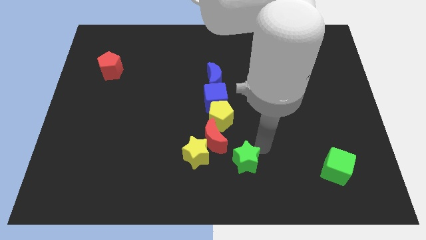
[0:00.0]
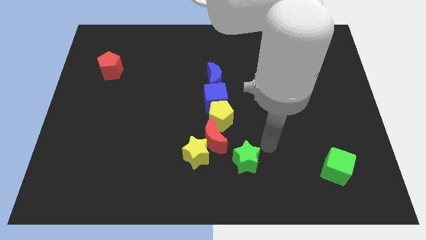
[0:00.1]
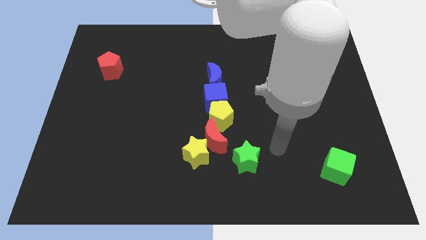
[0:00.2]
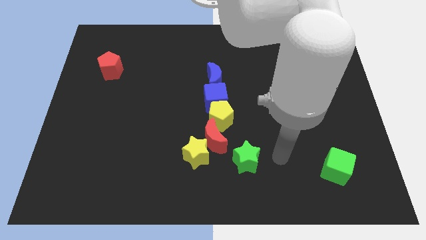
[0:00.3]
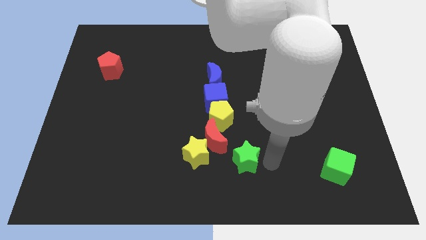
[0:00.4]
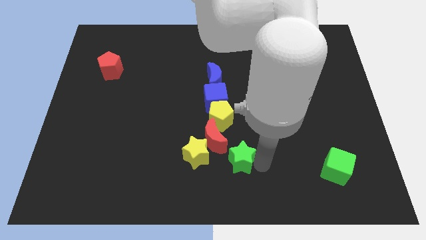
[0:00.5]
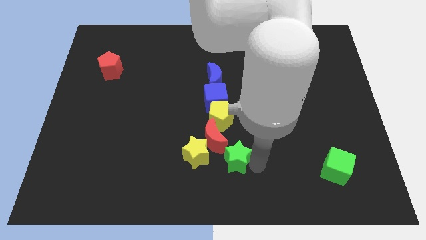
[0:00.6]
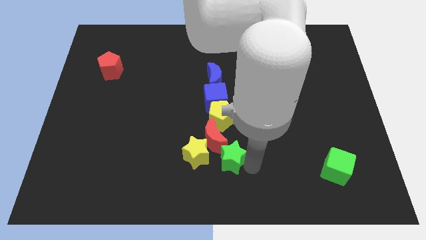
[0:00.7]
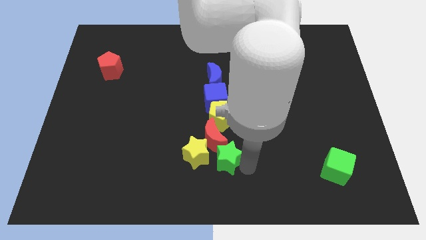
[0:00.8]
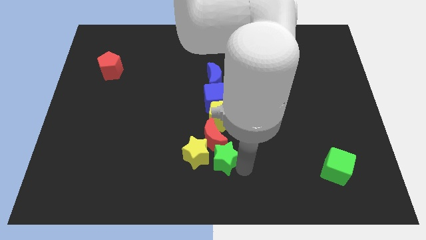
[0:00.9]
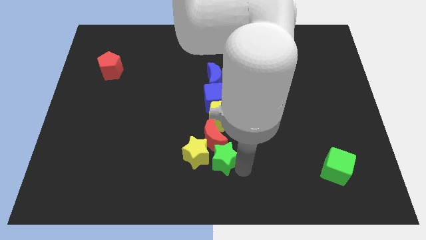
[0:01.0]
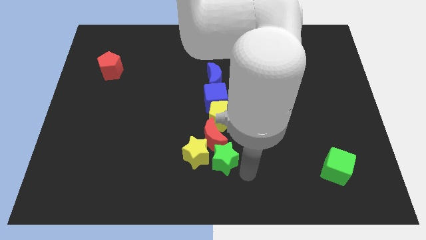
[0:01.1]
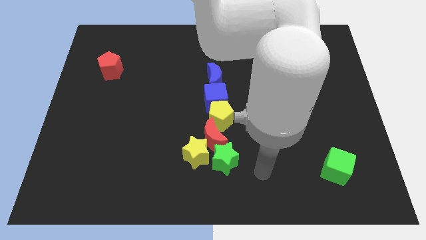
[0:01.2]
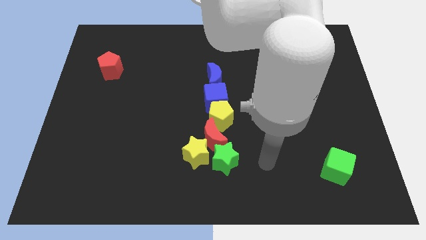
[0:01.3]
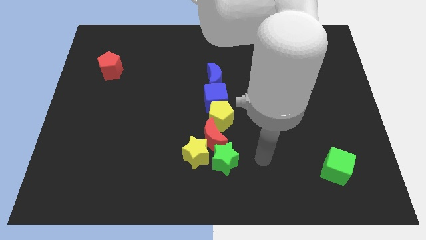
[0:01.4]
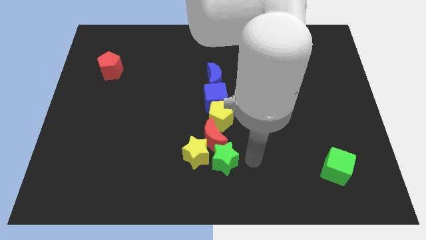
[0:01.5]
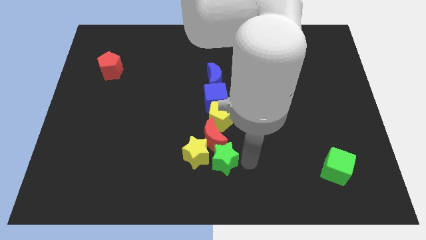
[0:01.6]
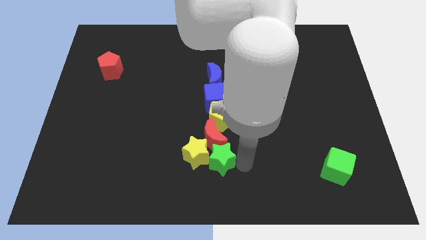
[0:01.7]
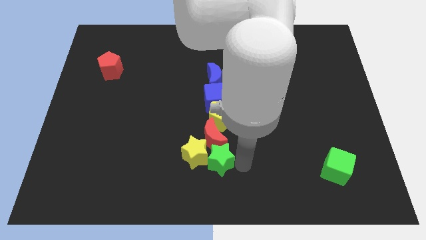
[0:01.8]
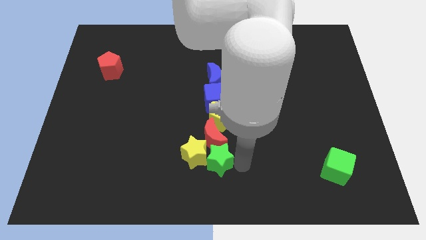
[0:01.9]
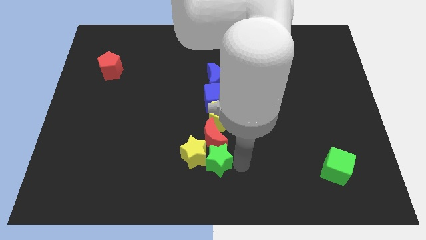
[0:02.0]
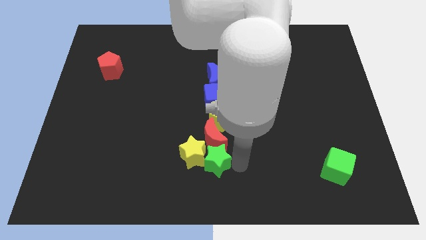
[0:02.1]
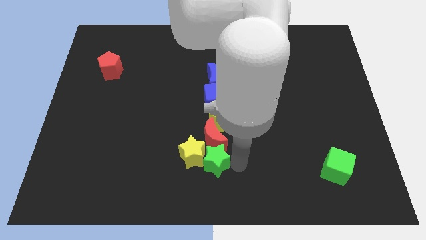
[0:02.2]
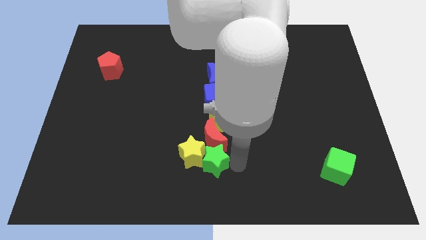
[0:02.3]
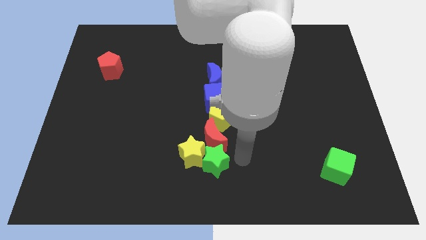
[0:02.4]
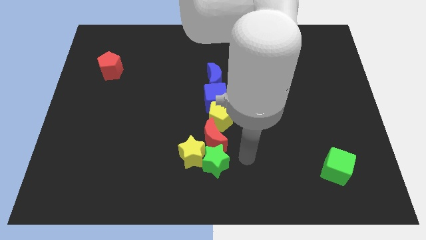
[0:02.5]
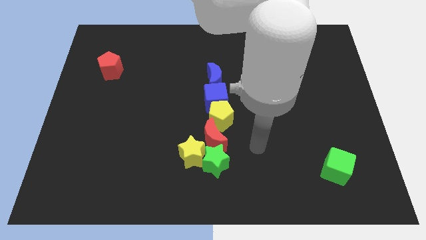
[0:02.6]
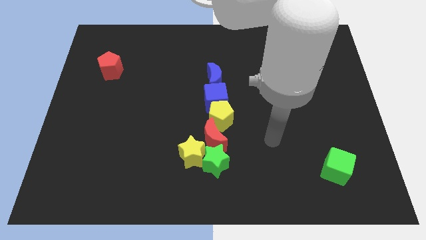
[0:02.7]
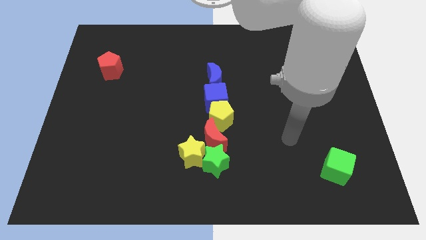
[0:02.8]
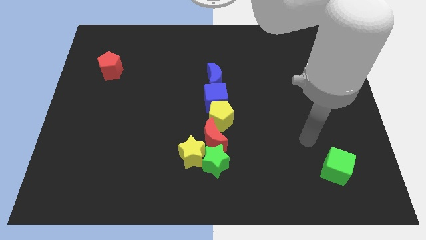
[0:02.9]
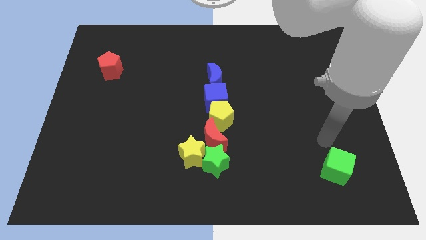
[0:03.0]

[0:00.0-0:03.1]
push the green star into the yellow star

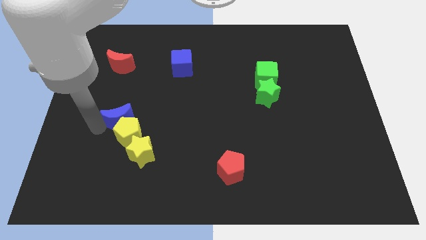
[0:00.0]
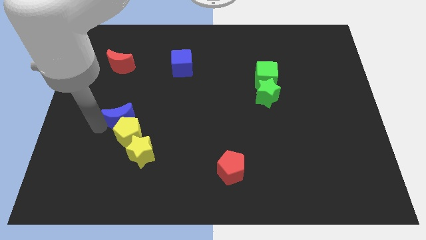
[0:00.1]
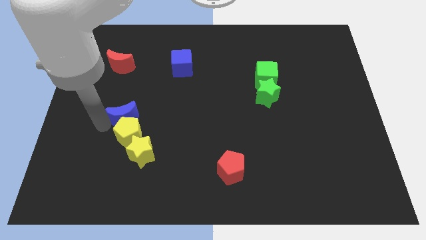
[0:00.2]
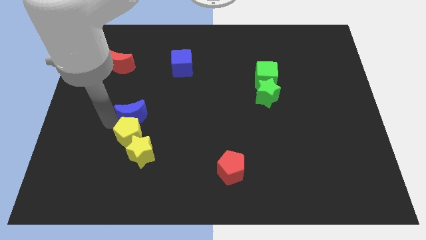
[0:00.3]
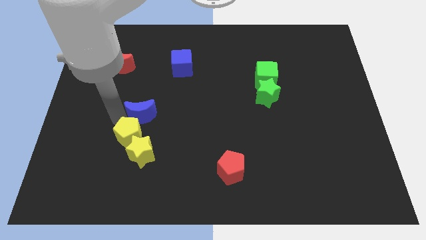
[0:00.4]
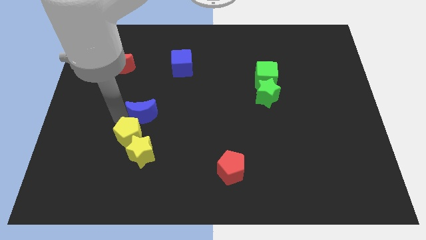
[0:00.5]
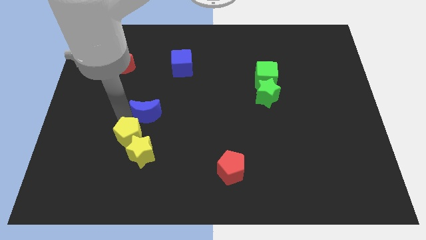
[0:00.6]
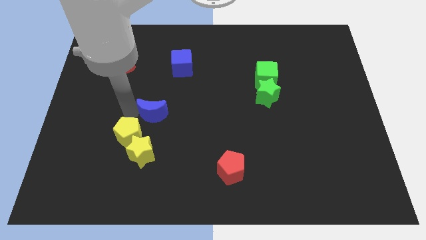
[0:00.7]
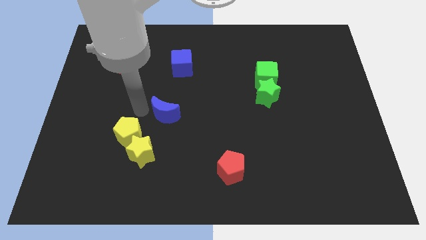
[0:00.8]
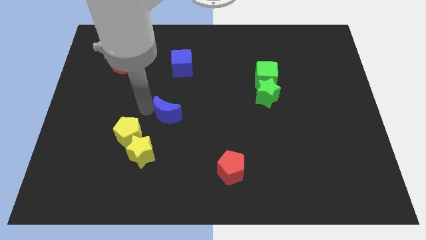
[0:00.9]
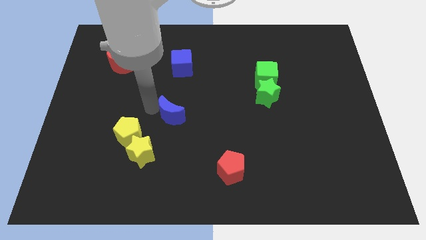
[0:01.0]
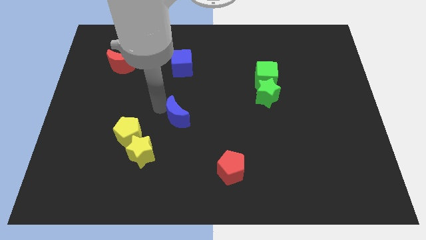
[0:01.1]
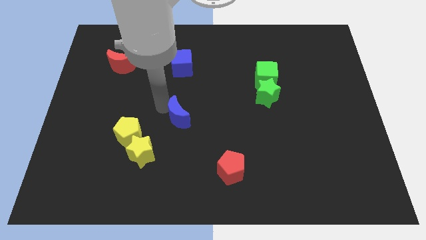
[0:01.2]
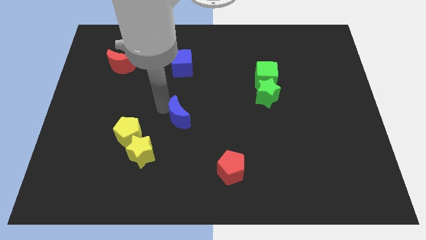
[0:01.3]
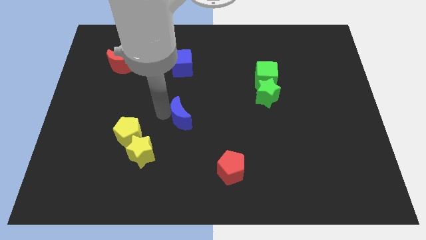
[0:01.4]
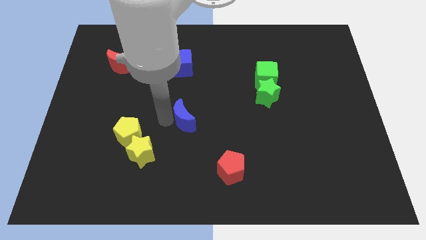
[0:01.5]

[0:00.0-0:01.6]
slide blue moon vertically below blue cube

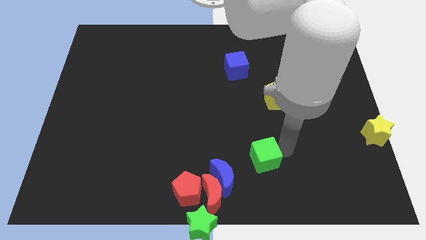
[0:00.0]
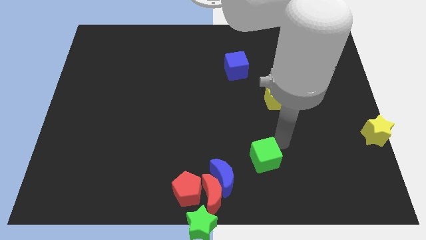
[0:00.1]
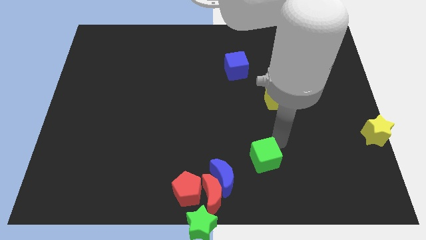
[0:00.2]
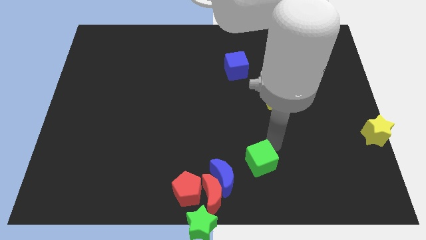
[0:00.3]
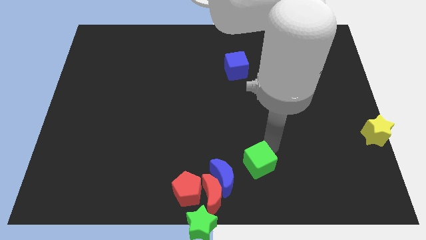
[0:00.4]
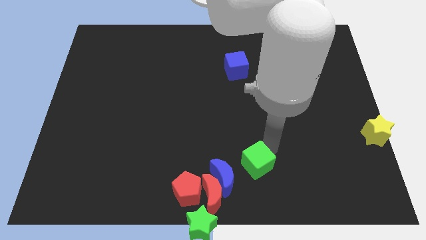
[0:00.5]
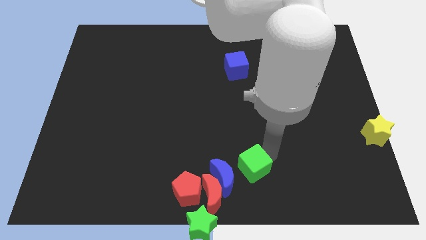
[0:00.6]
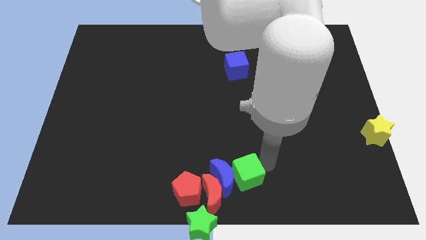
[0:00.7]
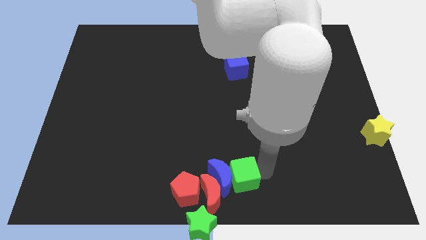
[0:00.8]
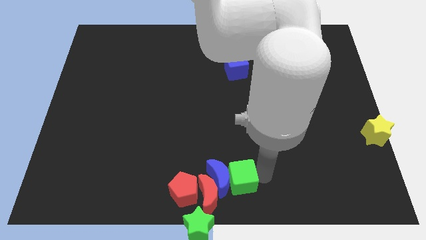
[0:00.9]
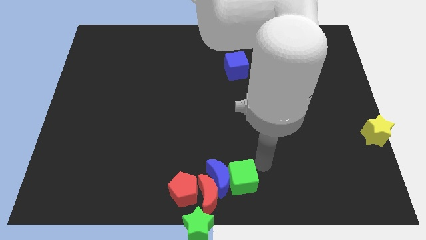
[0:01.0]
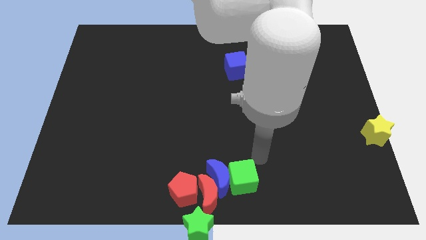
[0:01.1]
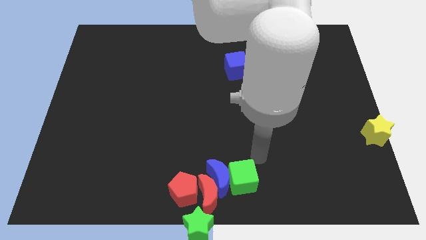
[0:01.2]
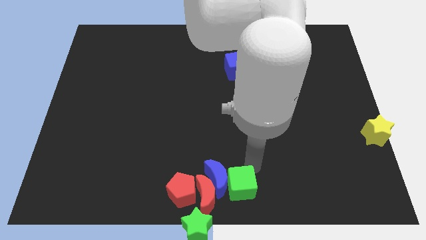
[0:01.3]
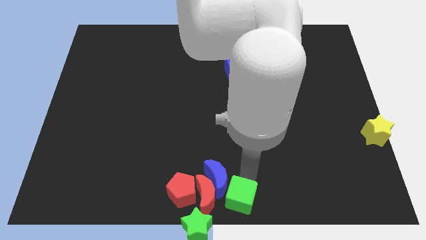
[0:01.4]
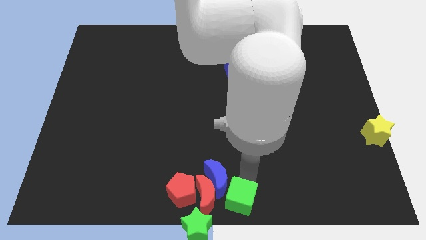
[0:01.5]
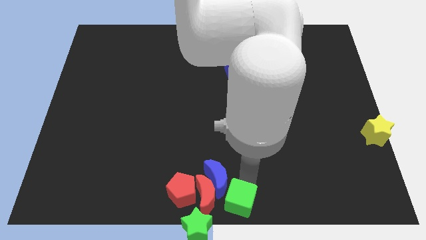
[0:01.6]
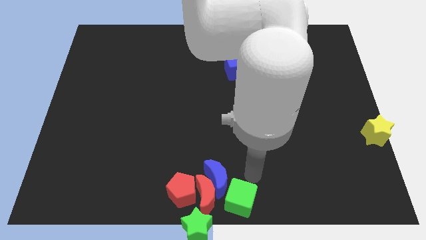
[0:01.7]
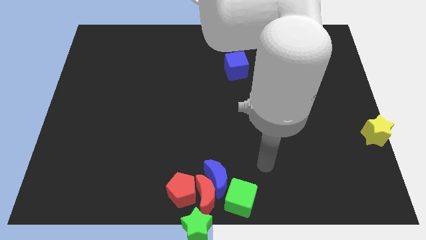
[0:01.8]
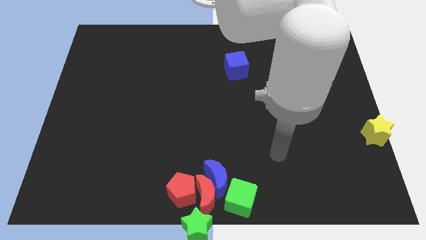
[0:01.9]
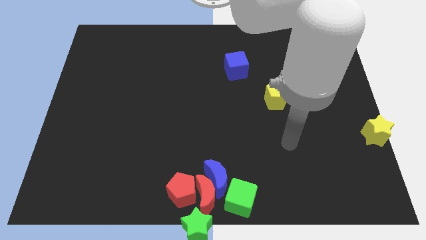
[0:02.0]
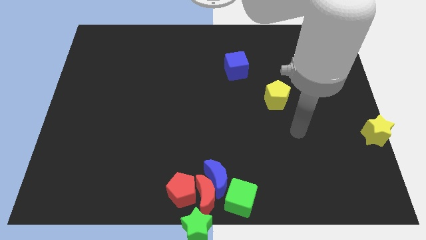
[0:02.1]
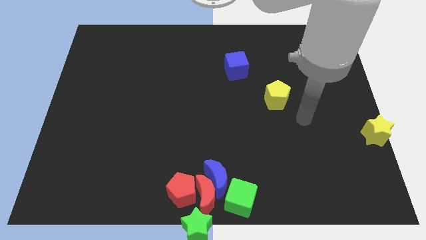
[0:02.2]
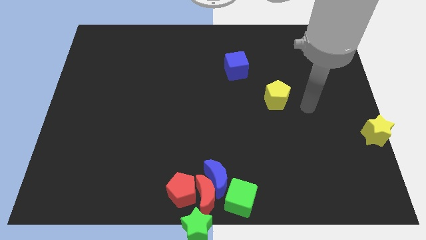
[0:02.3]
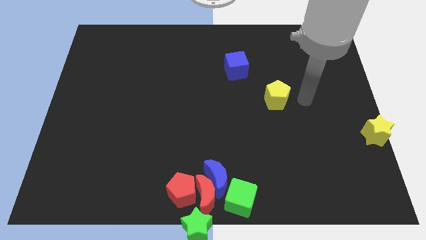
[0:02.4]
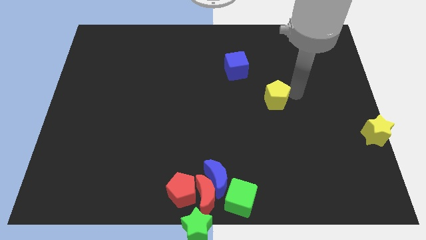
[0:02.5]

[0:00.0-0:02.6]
push the green cube into the blue crescent

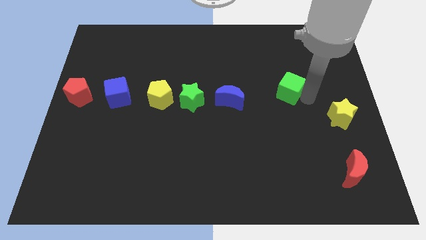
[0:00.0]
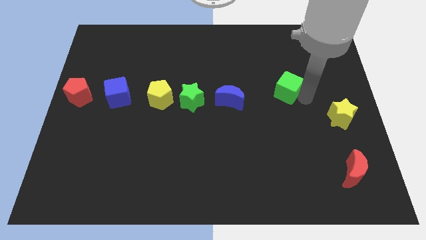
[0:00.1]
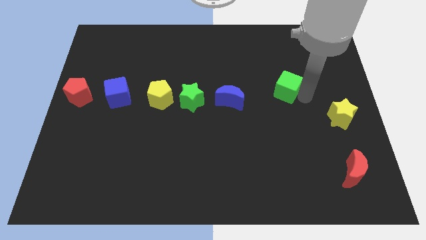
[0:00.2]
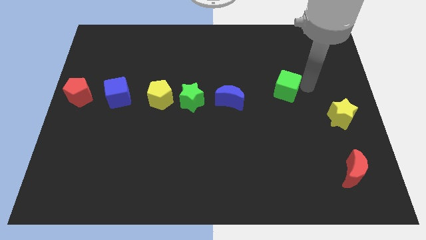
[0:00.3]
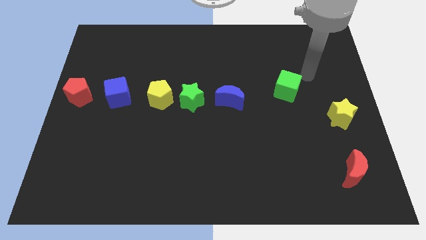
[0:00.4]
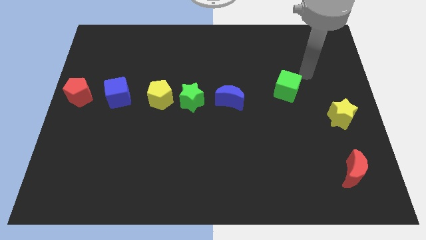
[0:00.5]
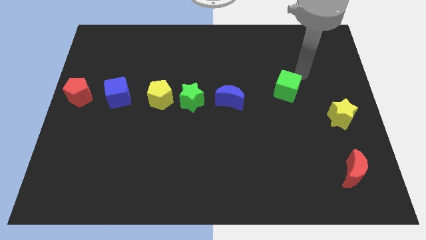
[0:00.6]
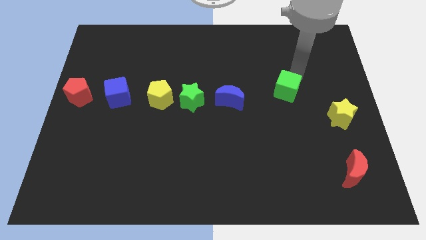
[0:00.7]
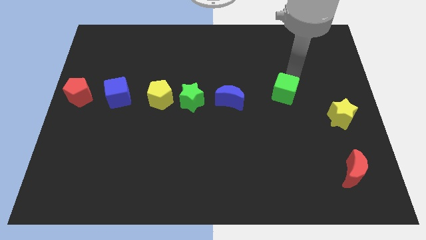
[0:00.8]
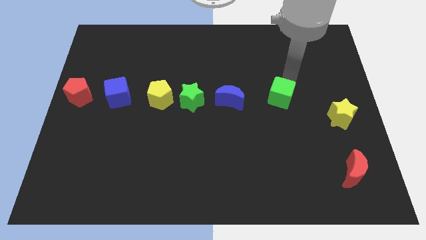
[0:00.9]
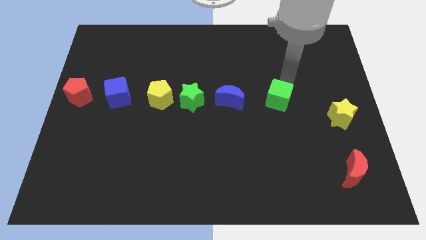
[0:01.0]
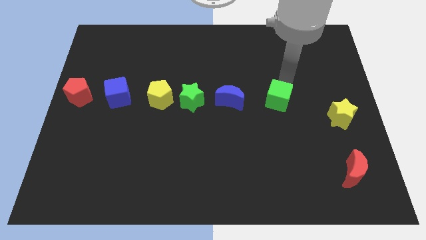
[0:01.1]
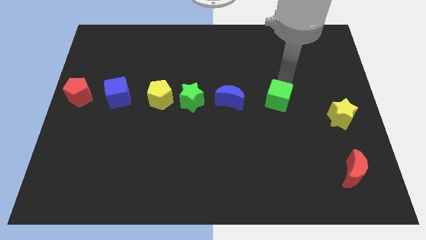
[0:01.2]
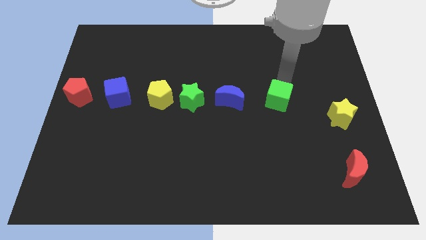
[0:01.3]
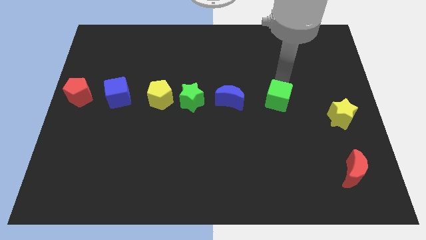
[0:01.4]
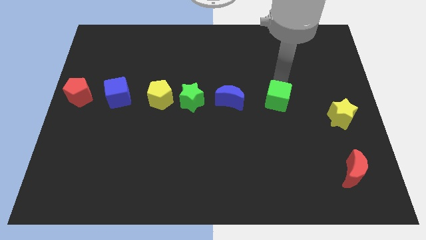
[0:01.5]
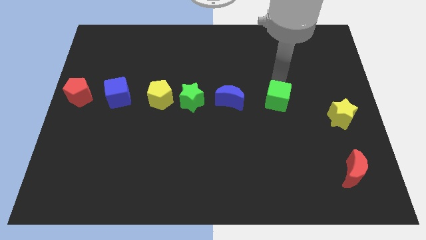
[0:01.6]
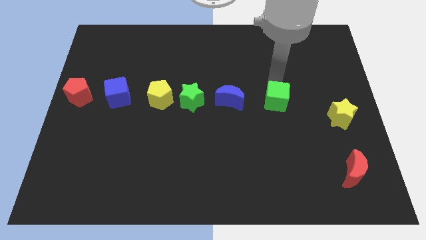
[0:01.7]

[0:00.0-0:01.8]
drag the green cube diagonal to the red moon
